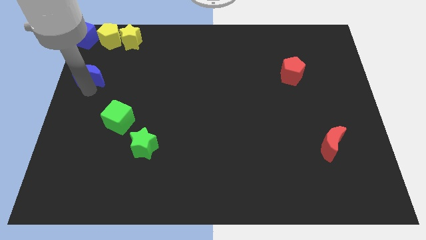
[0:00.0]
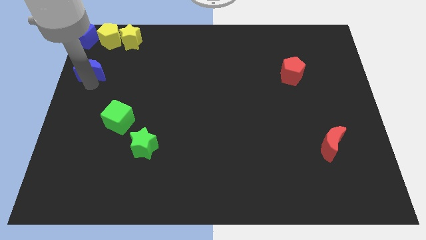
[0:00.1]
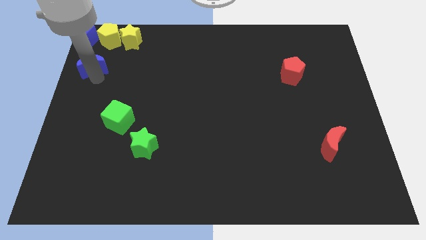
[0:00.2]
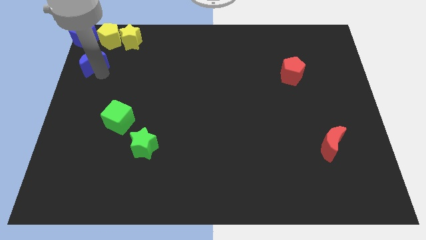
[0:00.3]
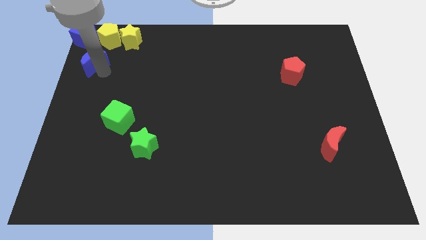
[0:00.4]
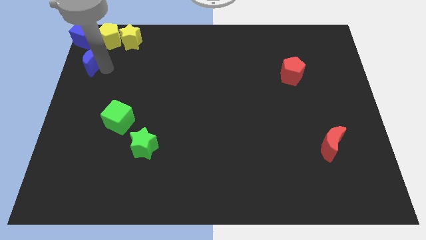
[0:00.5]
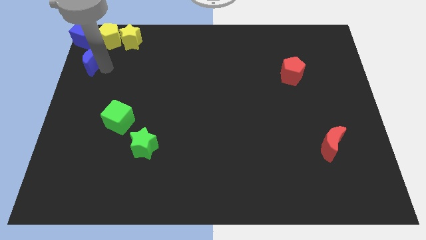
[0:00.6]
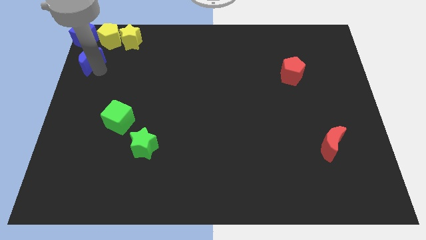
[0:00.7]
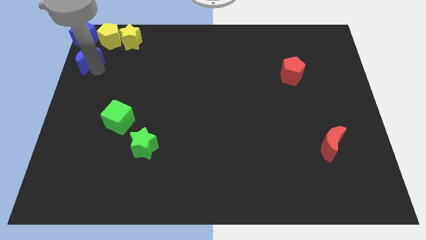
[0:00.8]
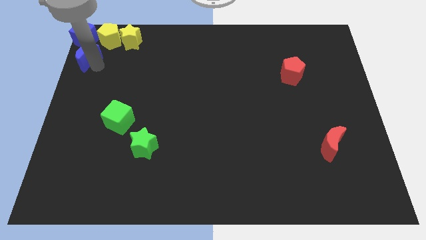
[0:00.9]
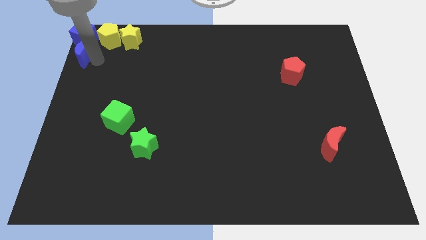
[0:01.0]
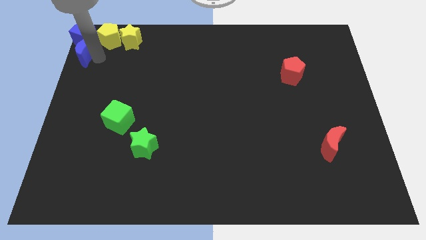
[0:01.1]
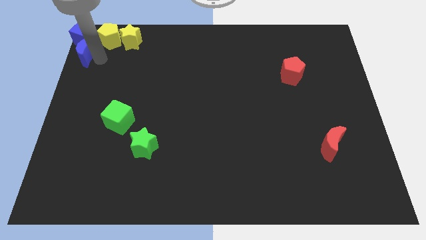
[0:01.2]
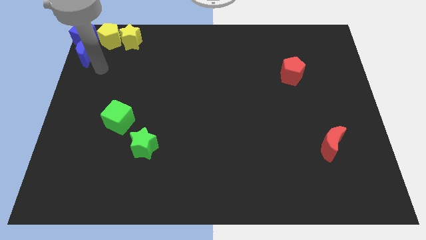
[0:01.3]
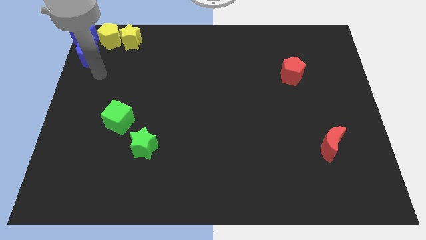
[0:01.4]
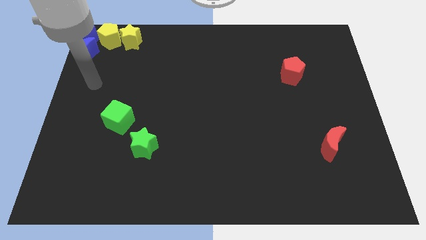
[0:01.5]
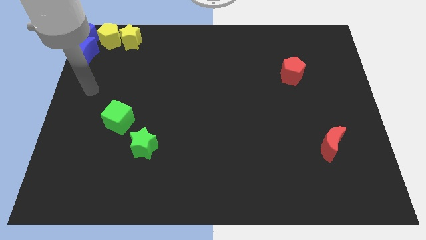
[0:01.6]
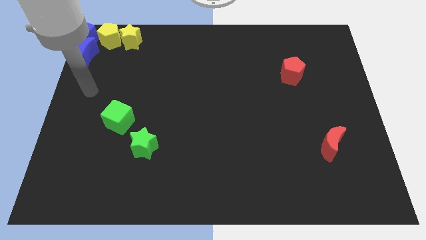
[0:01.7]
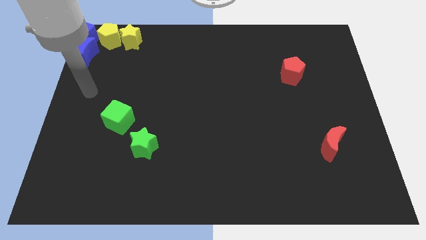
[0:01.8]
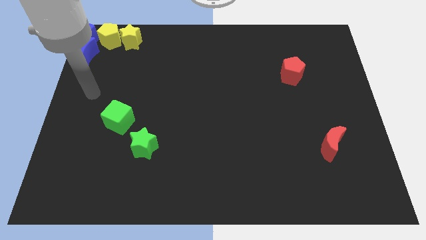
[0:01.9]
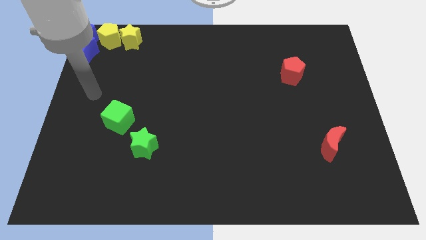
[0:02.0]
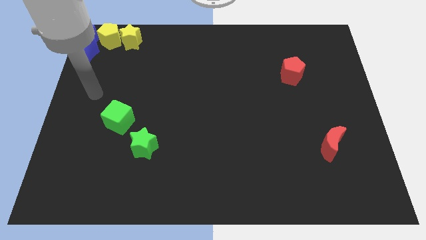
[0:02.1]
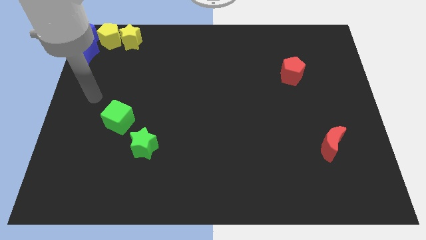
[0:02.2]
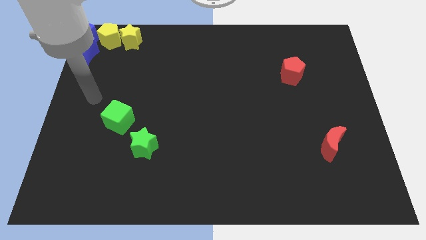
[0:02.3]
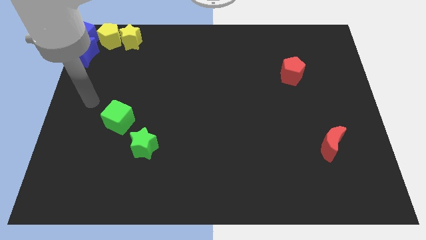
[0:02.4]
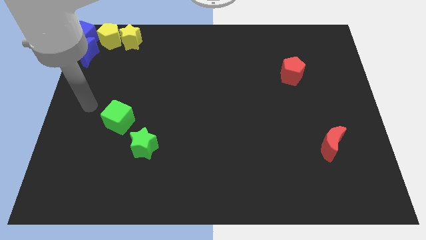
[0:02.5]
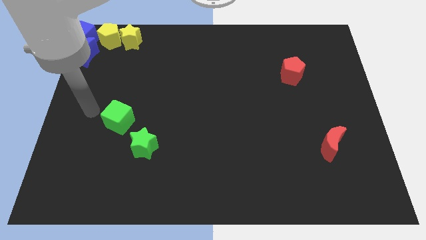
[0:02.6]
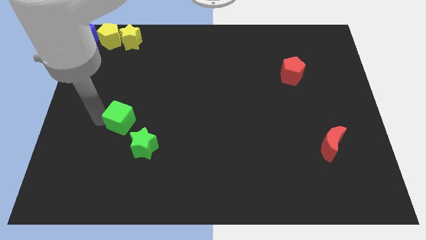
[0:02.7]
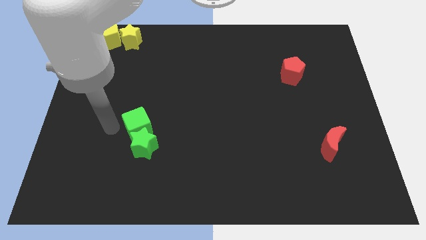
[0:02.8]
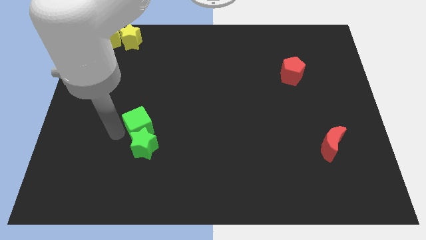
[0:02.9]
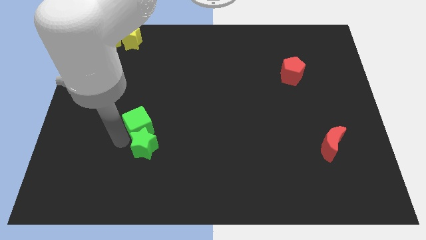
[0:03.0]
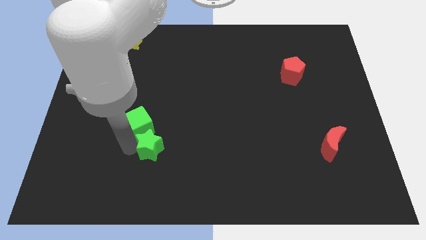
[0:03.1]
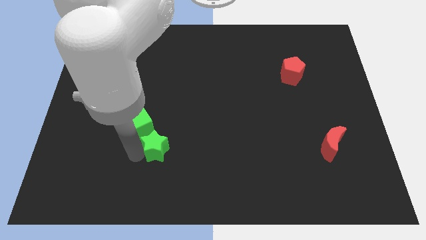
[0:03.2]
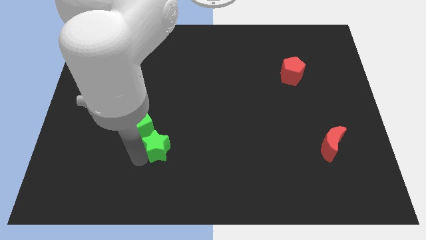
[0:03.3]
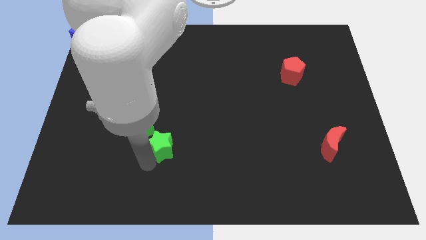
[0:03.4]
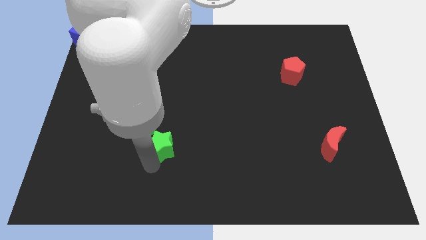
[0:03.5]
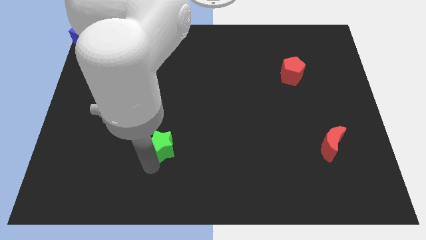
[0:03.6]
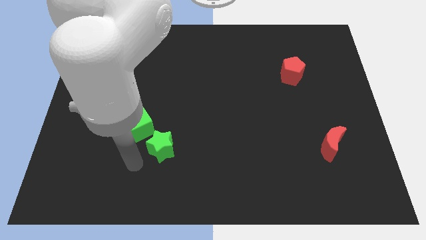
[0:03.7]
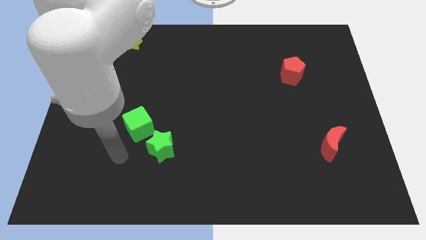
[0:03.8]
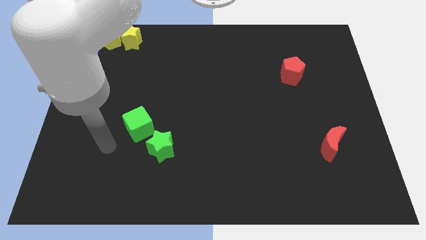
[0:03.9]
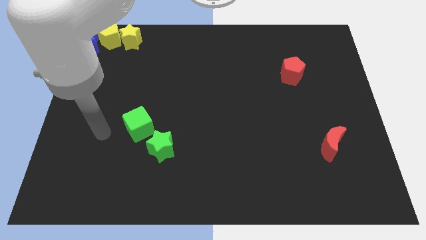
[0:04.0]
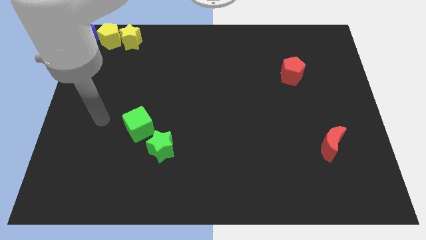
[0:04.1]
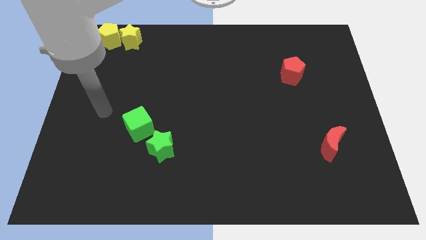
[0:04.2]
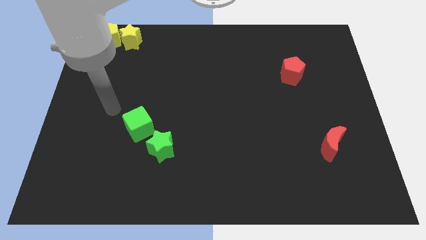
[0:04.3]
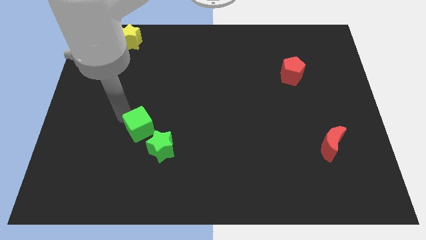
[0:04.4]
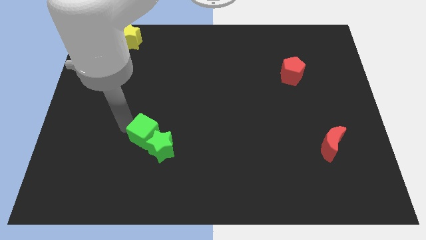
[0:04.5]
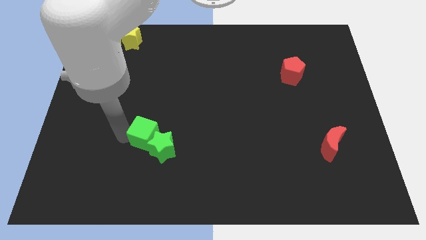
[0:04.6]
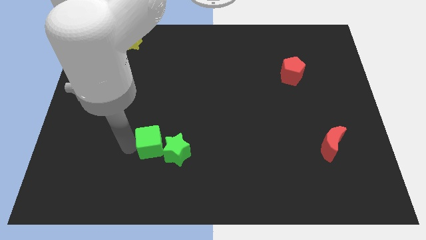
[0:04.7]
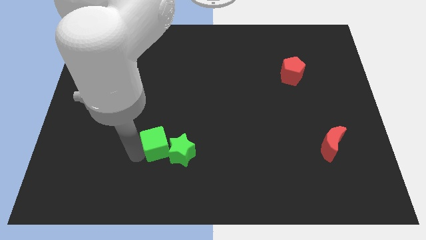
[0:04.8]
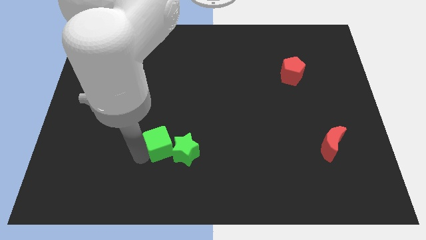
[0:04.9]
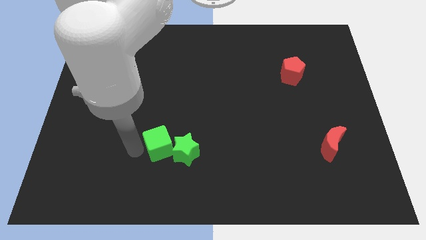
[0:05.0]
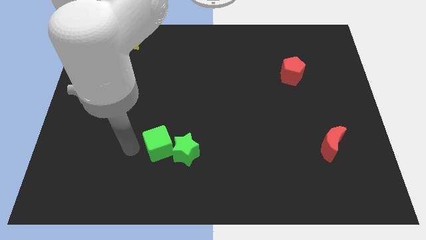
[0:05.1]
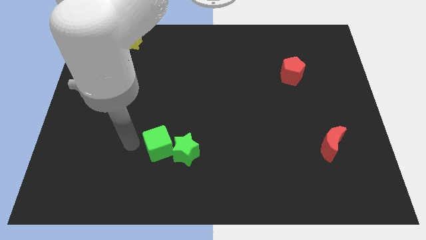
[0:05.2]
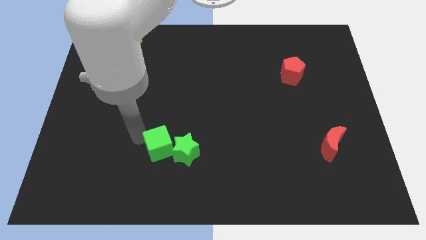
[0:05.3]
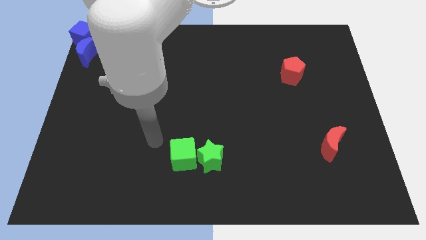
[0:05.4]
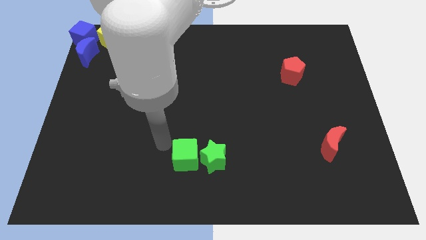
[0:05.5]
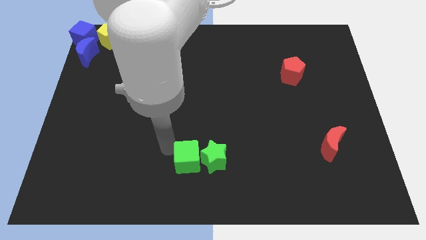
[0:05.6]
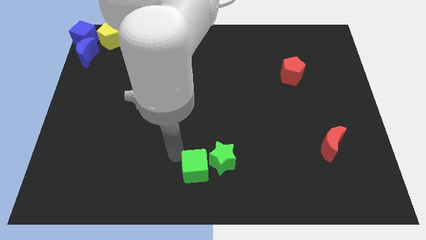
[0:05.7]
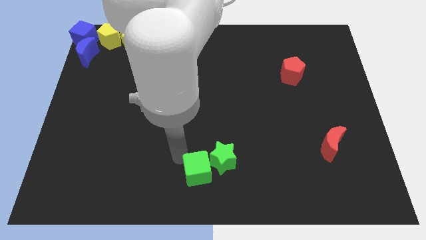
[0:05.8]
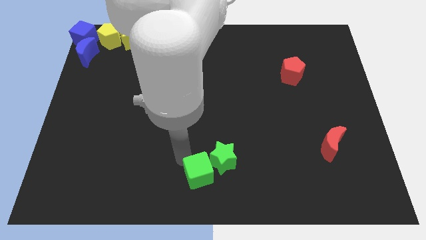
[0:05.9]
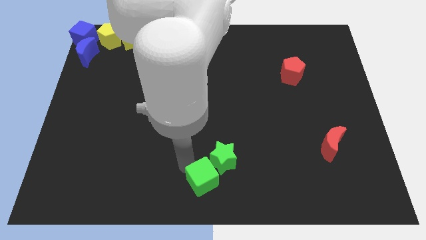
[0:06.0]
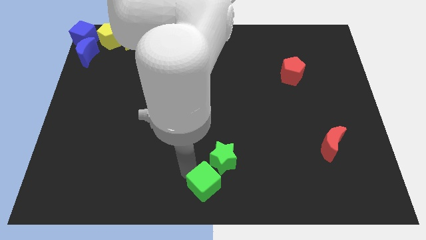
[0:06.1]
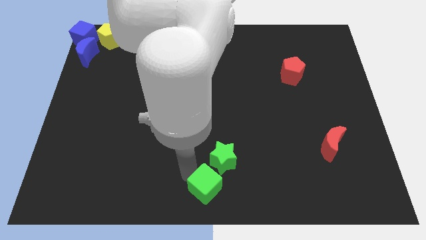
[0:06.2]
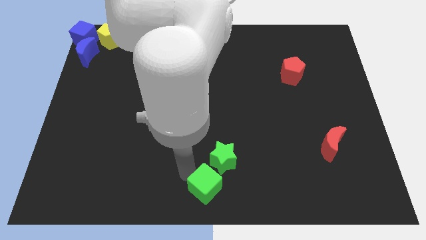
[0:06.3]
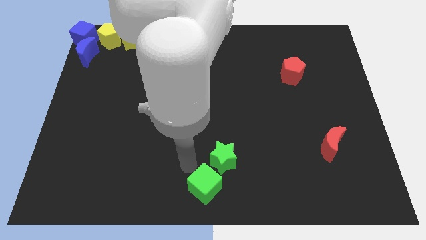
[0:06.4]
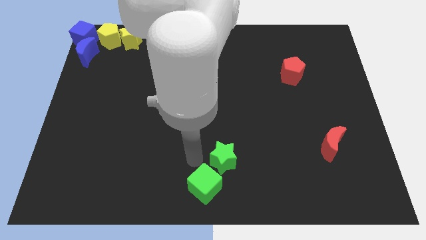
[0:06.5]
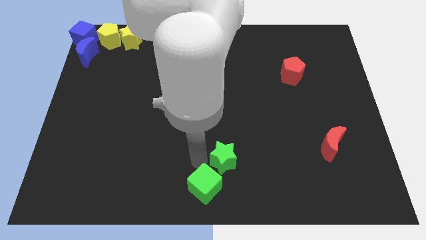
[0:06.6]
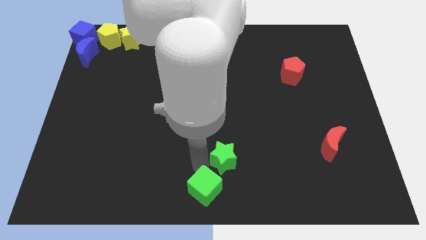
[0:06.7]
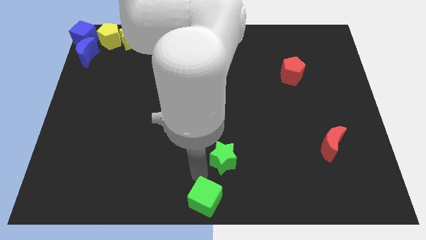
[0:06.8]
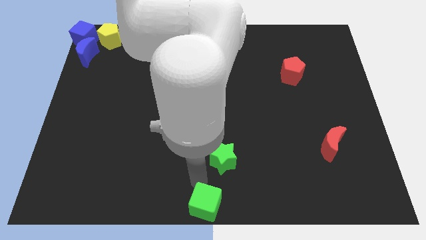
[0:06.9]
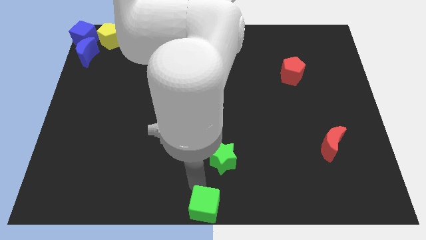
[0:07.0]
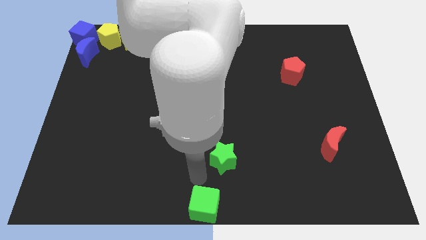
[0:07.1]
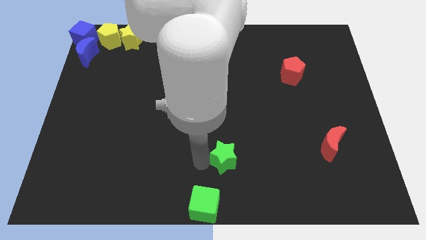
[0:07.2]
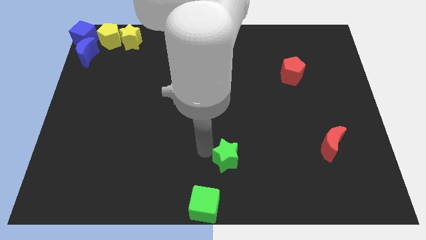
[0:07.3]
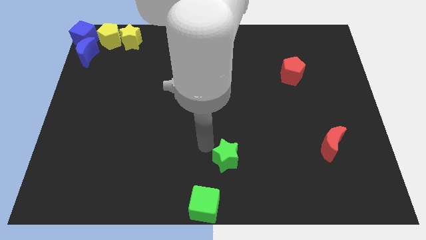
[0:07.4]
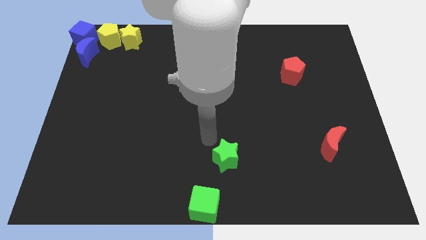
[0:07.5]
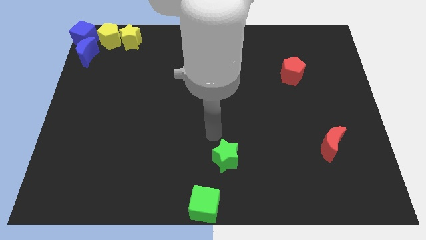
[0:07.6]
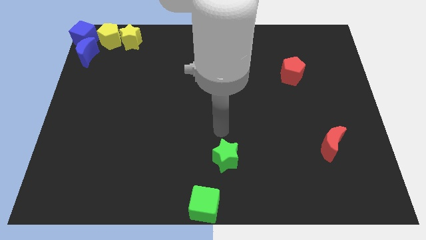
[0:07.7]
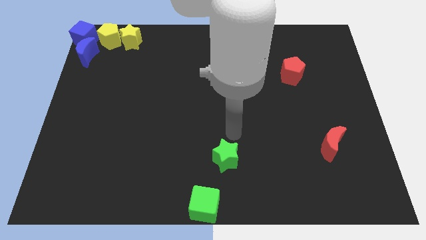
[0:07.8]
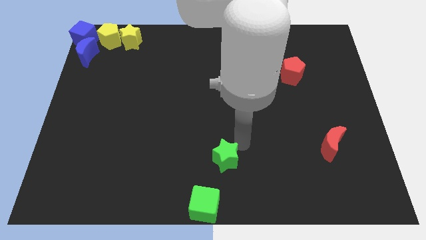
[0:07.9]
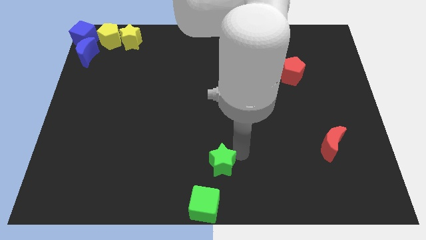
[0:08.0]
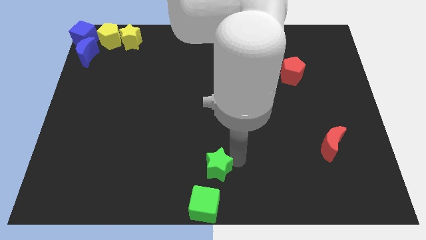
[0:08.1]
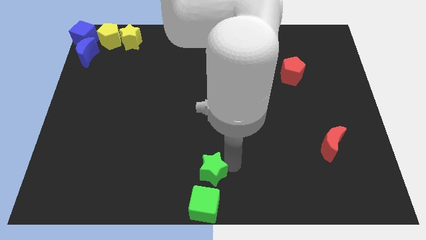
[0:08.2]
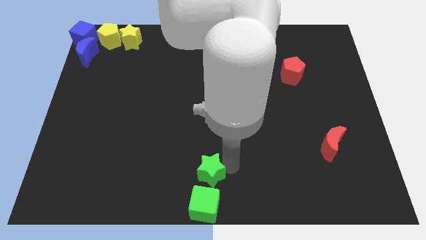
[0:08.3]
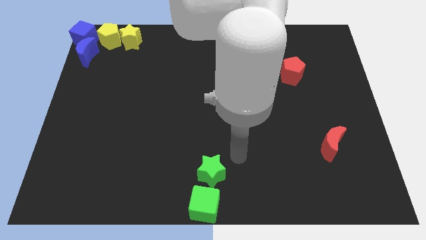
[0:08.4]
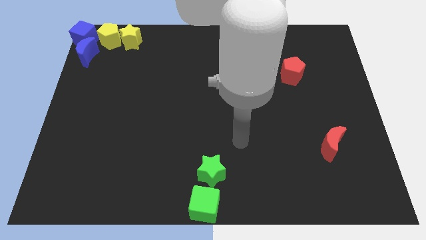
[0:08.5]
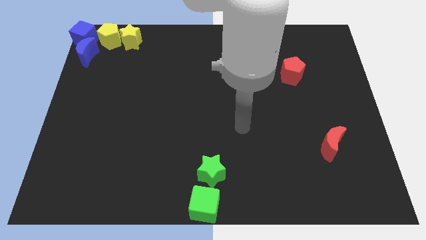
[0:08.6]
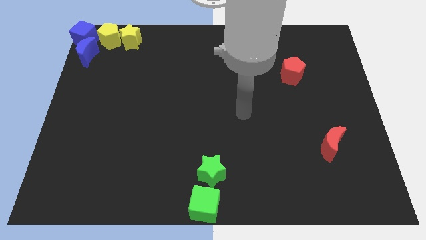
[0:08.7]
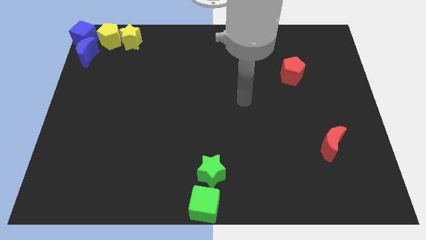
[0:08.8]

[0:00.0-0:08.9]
arrange the green star on the green cube at the bottom side of the board
